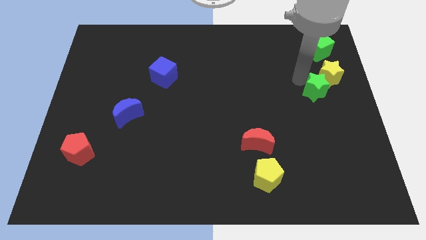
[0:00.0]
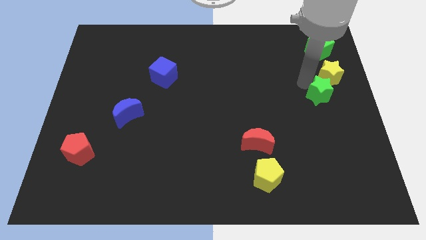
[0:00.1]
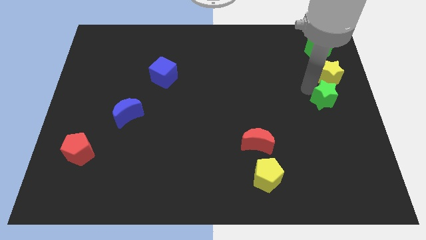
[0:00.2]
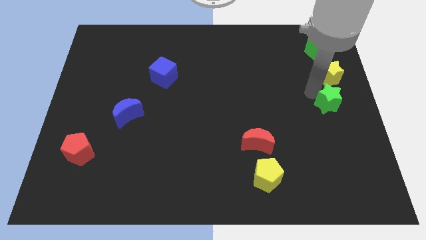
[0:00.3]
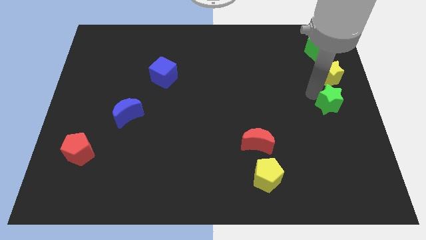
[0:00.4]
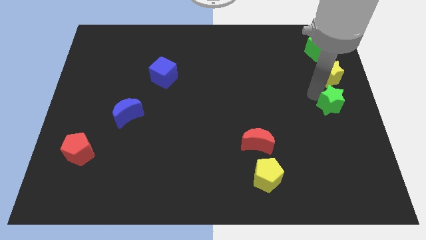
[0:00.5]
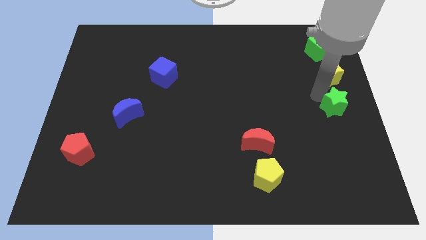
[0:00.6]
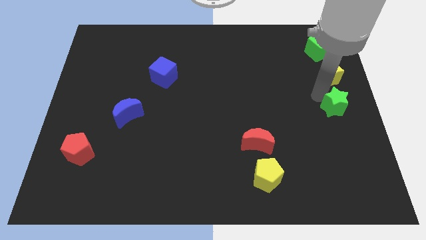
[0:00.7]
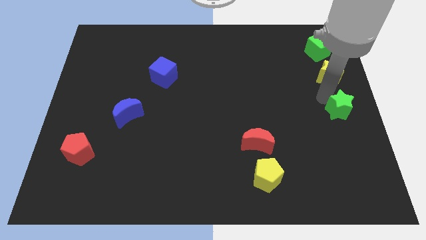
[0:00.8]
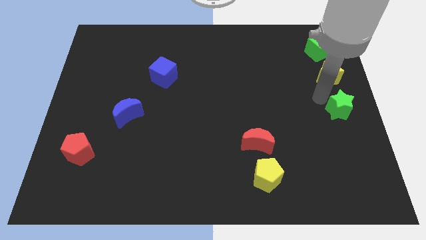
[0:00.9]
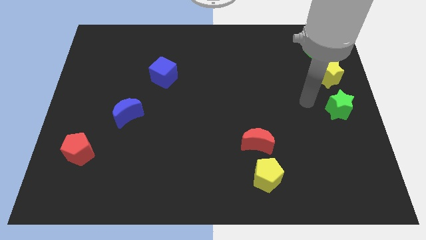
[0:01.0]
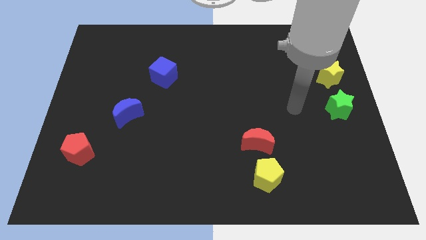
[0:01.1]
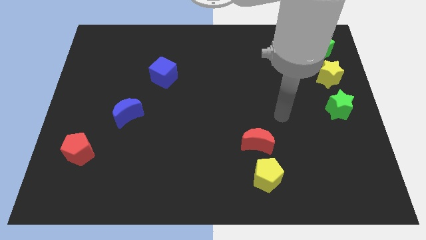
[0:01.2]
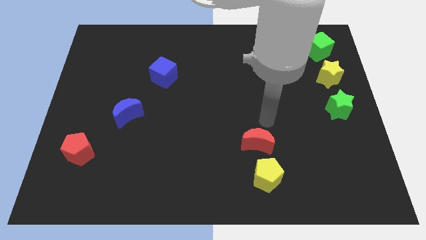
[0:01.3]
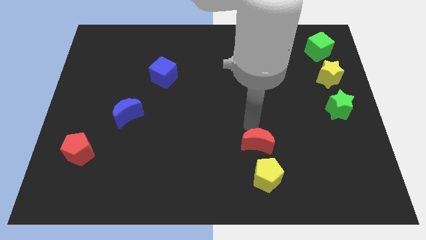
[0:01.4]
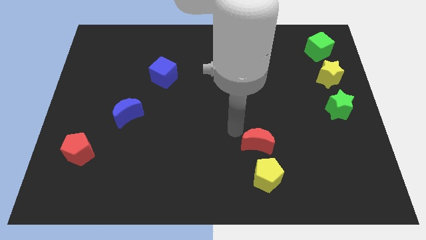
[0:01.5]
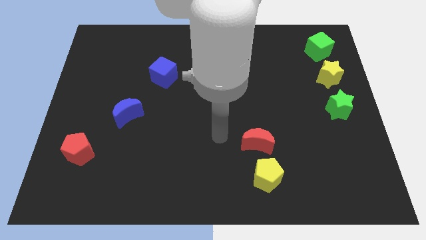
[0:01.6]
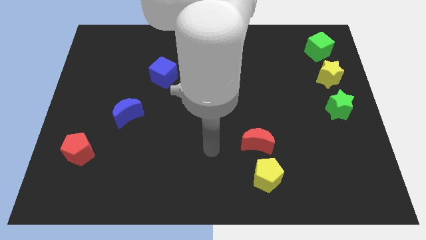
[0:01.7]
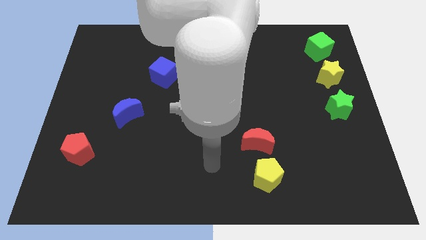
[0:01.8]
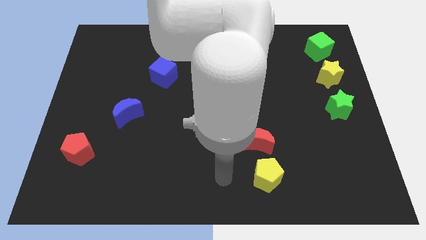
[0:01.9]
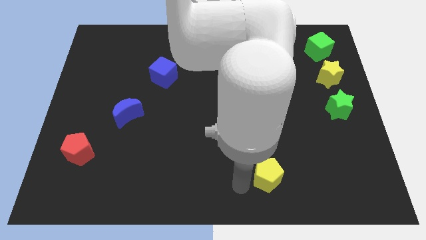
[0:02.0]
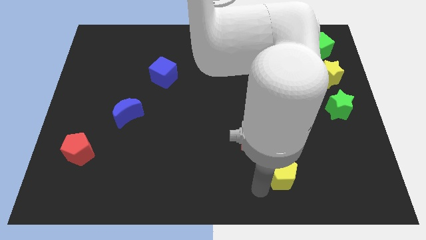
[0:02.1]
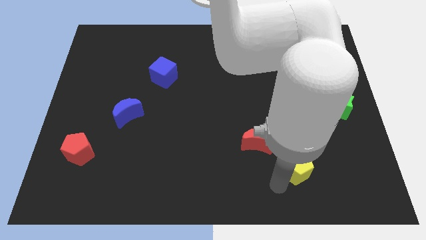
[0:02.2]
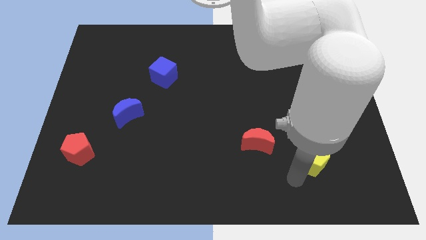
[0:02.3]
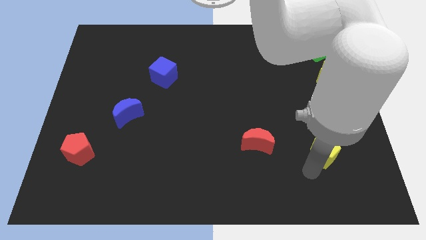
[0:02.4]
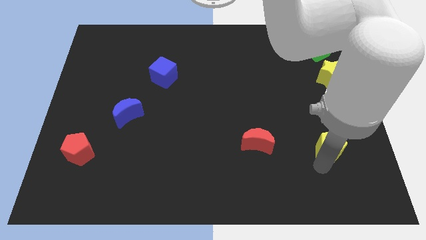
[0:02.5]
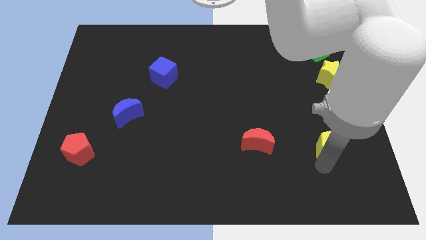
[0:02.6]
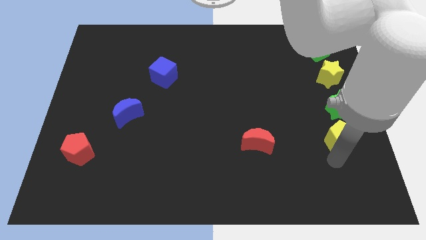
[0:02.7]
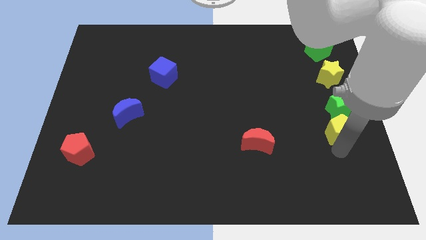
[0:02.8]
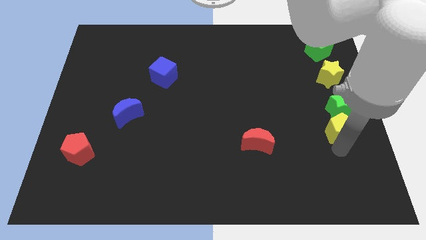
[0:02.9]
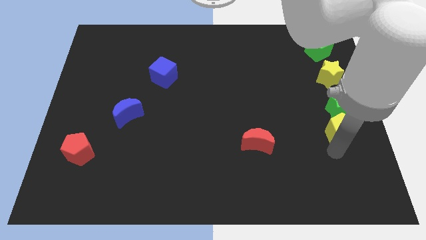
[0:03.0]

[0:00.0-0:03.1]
push yellow pentagon into green star

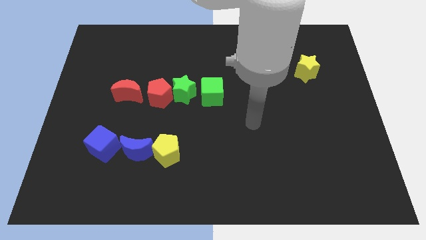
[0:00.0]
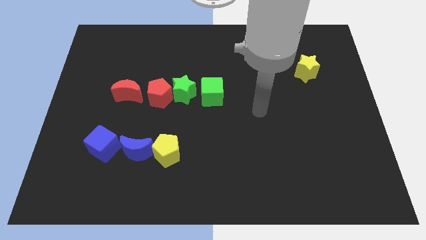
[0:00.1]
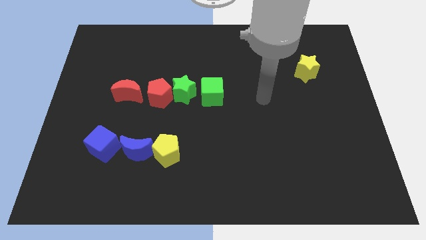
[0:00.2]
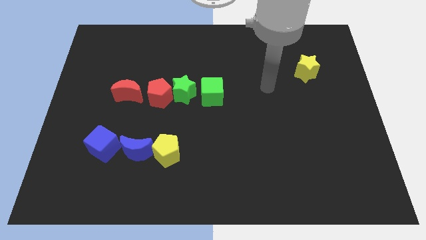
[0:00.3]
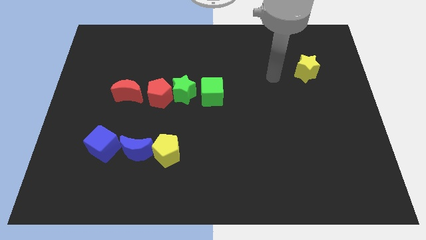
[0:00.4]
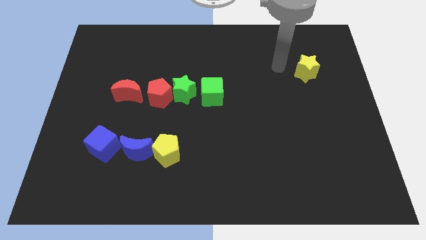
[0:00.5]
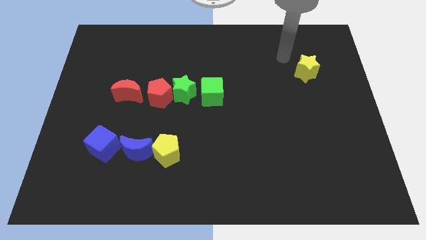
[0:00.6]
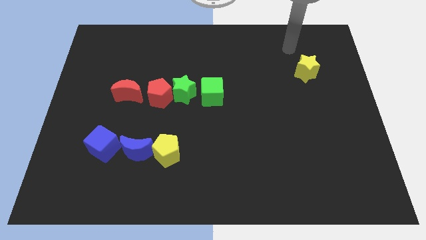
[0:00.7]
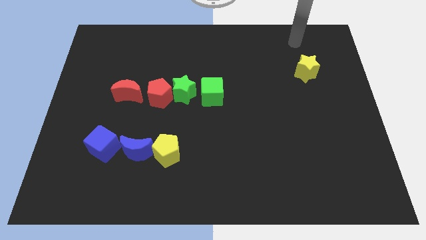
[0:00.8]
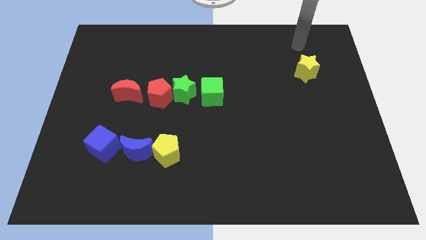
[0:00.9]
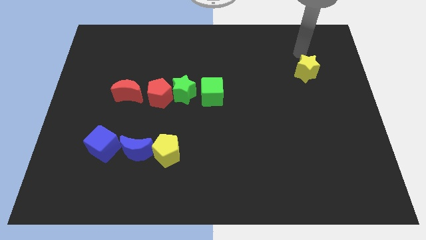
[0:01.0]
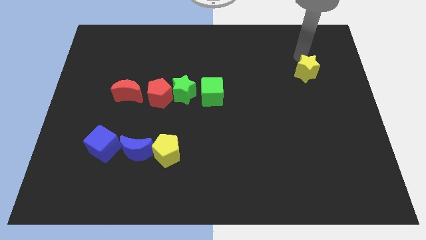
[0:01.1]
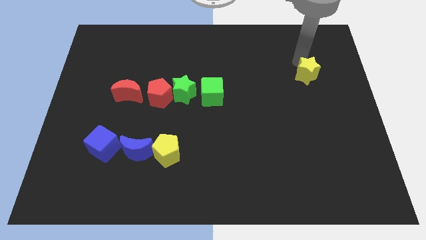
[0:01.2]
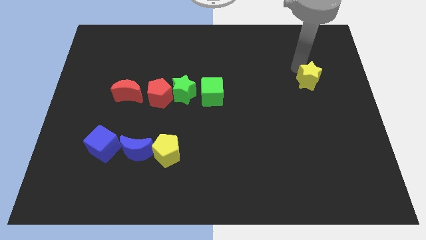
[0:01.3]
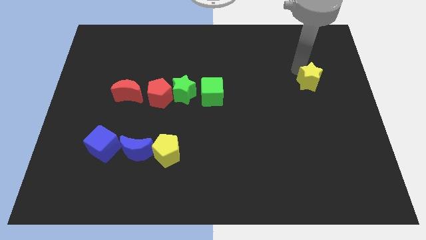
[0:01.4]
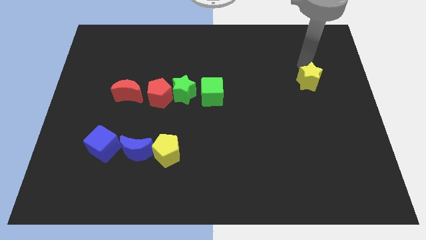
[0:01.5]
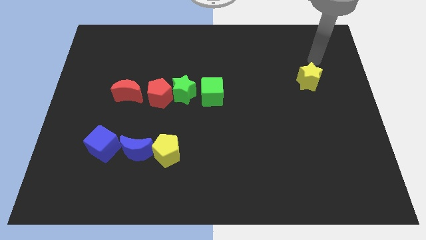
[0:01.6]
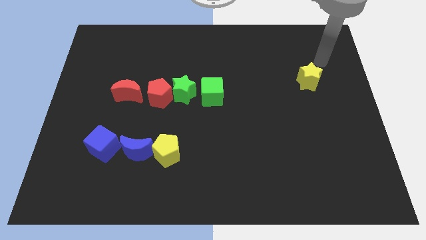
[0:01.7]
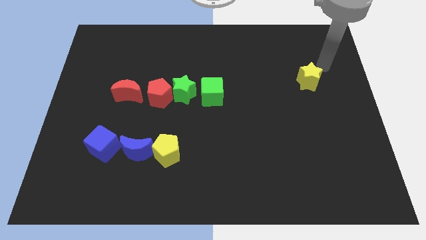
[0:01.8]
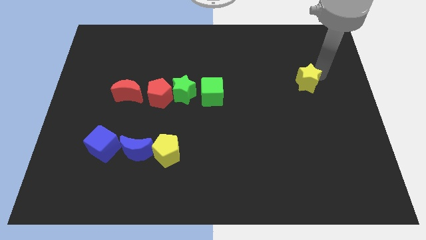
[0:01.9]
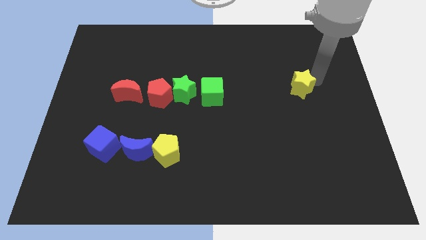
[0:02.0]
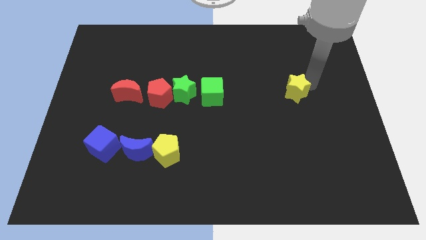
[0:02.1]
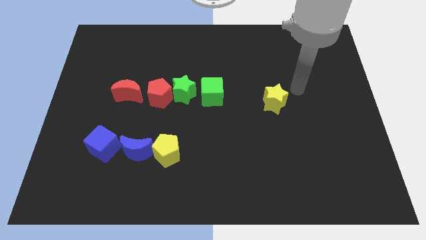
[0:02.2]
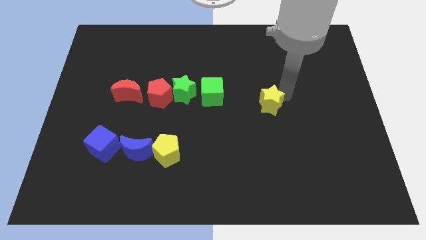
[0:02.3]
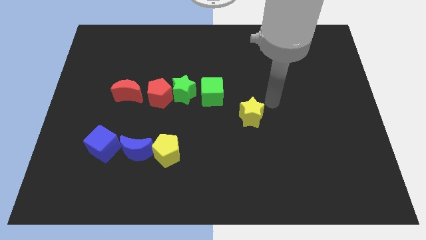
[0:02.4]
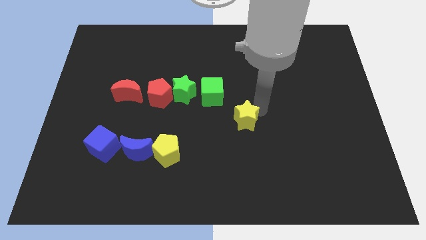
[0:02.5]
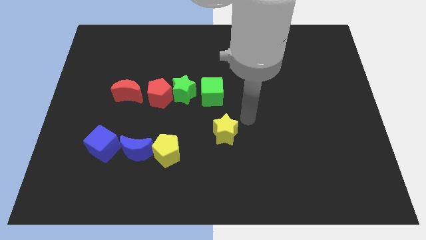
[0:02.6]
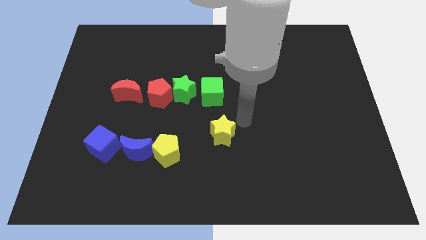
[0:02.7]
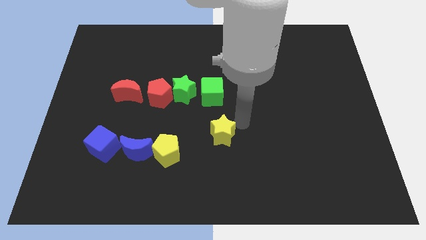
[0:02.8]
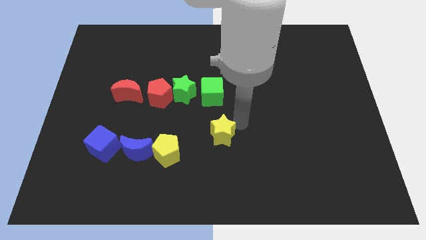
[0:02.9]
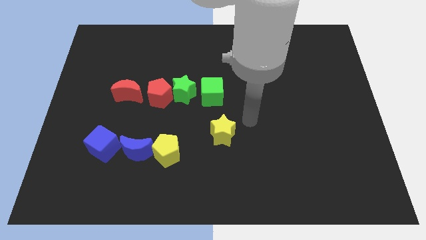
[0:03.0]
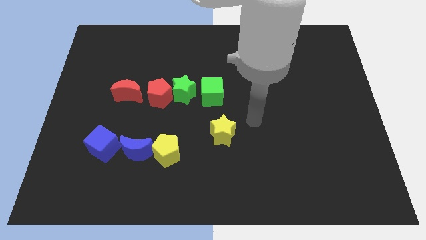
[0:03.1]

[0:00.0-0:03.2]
drag yellow star below green cube

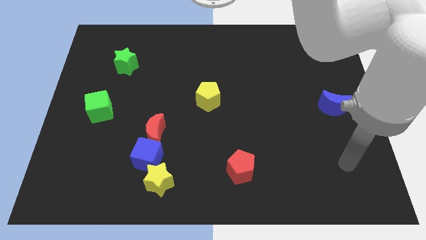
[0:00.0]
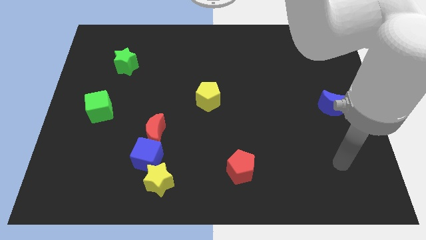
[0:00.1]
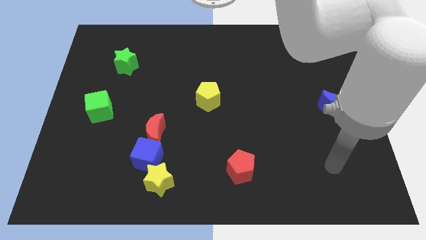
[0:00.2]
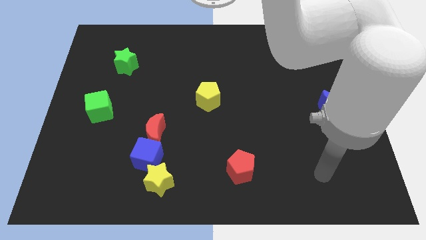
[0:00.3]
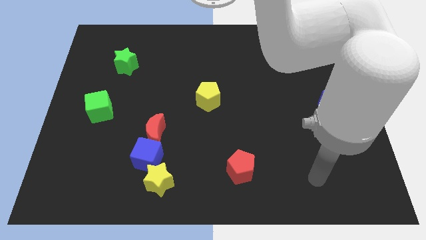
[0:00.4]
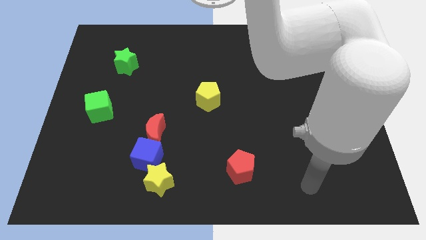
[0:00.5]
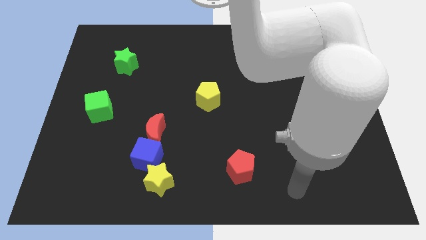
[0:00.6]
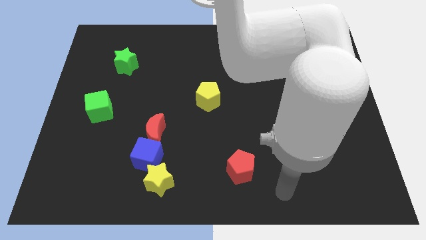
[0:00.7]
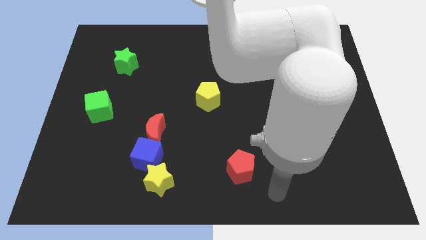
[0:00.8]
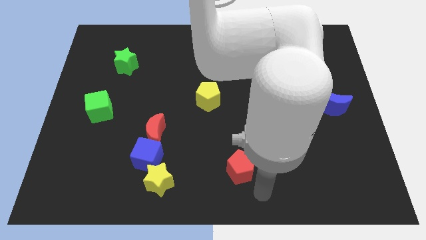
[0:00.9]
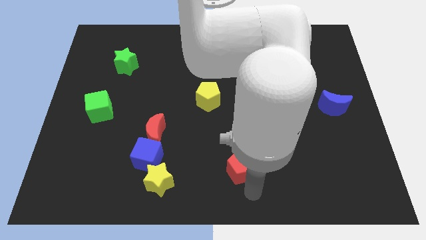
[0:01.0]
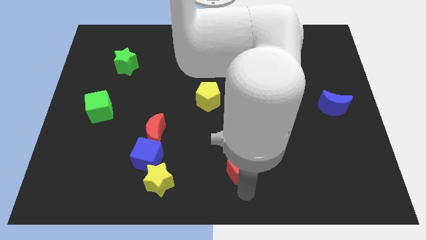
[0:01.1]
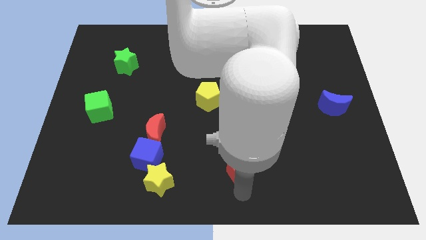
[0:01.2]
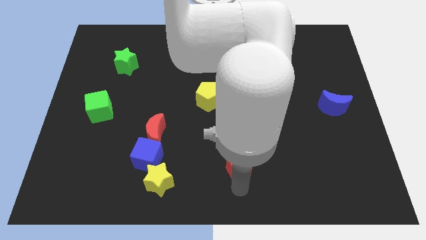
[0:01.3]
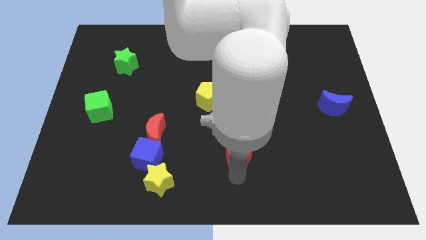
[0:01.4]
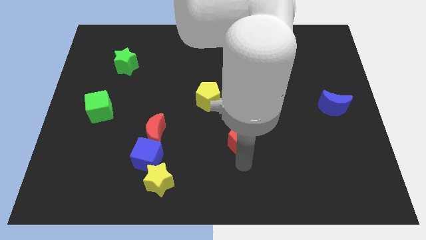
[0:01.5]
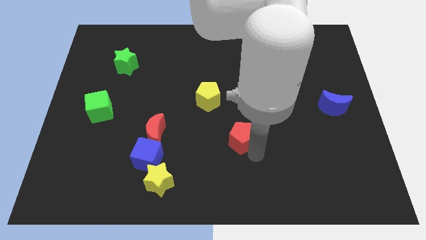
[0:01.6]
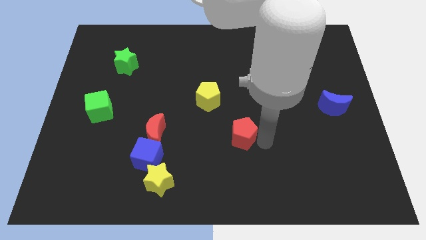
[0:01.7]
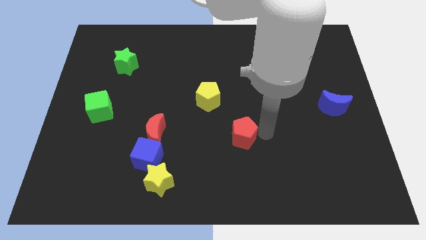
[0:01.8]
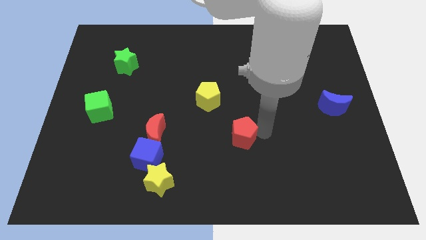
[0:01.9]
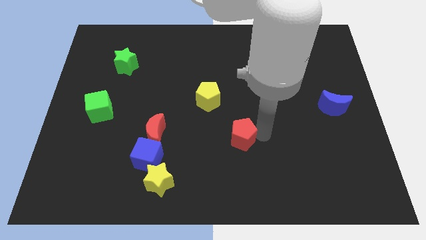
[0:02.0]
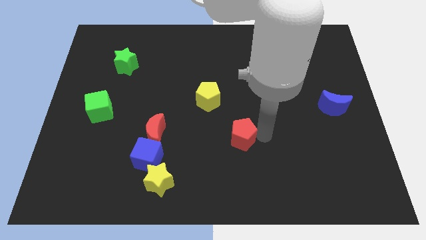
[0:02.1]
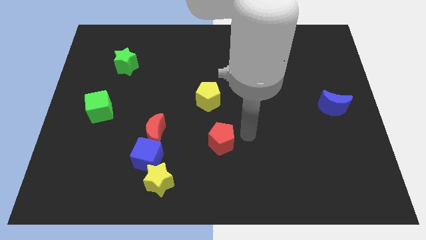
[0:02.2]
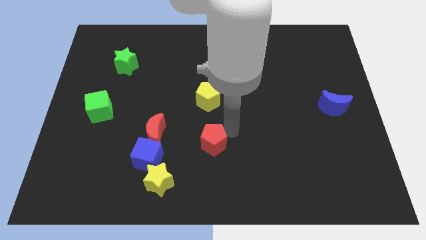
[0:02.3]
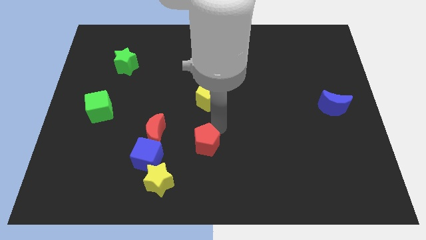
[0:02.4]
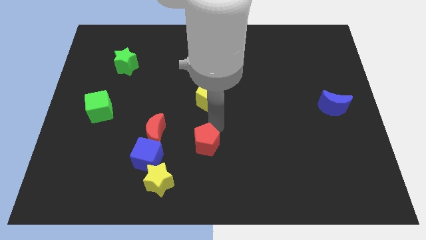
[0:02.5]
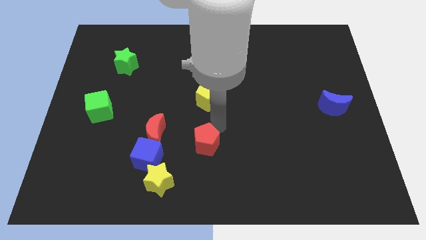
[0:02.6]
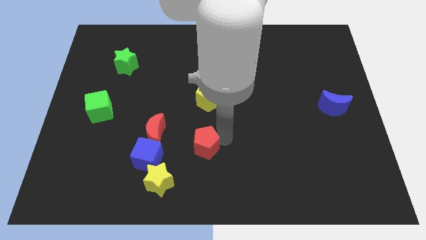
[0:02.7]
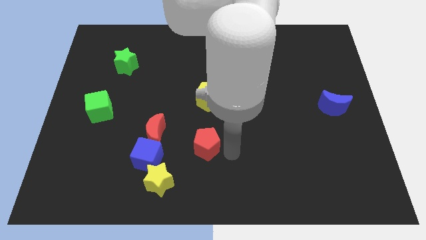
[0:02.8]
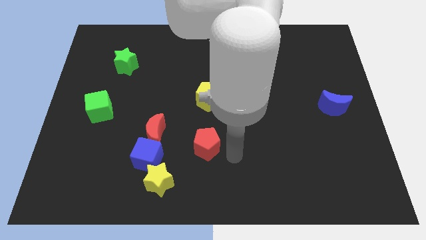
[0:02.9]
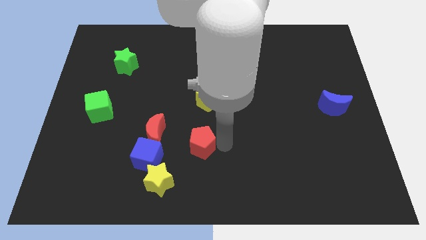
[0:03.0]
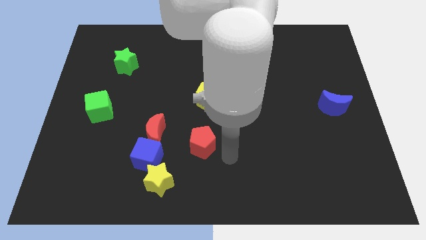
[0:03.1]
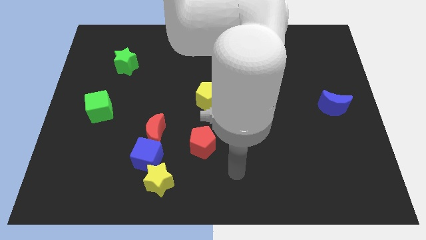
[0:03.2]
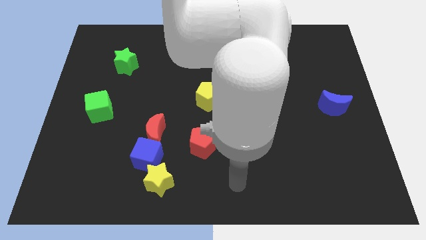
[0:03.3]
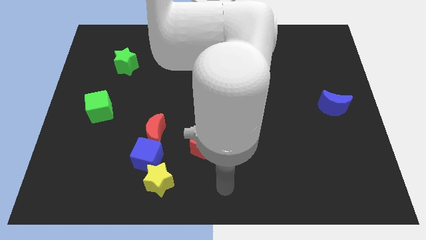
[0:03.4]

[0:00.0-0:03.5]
place red pentagon below yellow pentagon
